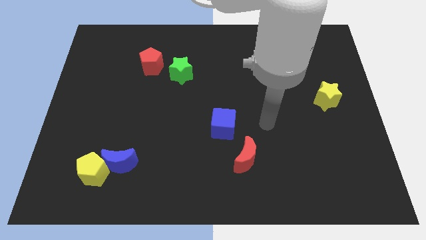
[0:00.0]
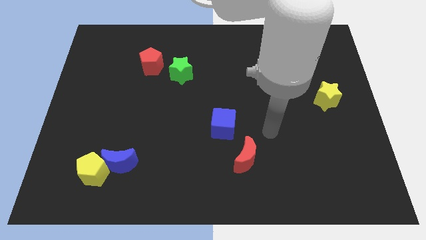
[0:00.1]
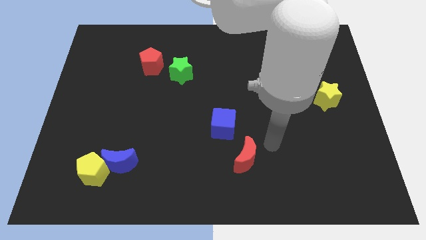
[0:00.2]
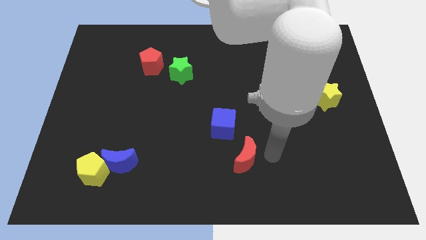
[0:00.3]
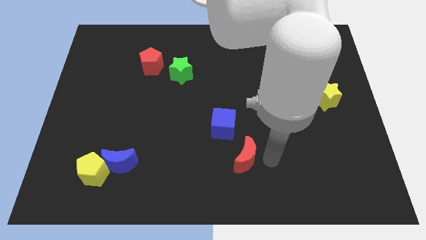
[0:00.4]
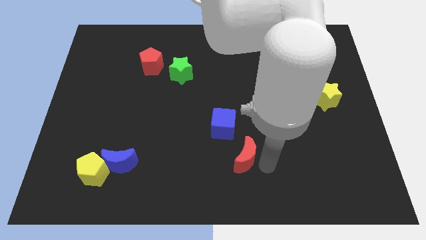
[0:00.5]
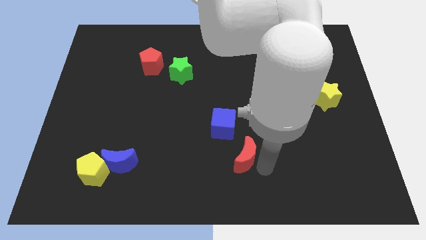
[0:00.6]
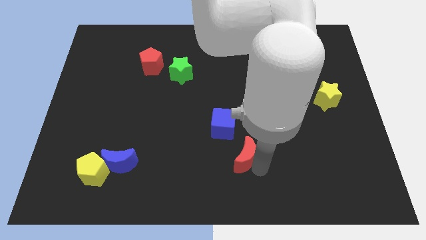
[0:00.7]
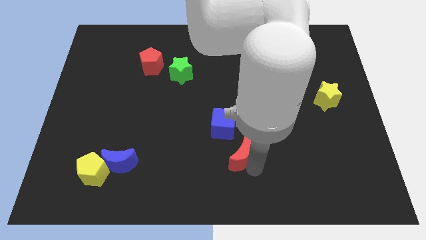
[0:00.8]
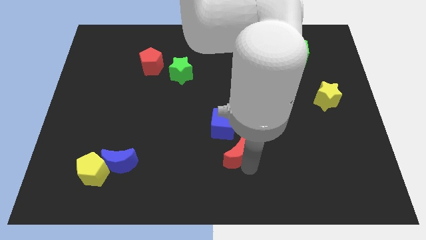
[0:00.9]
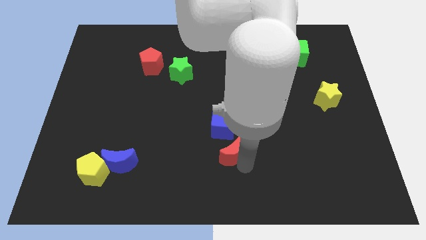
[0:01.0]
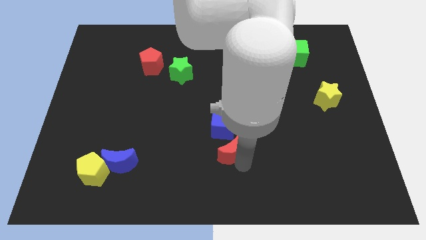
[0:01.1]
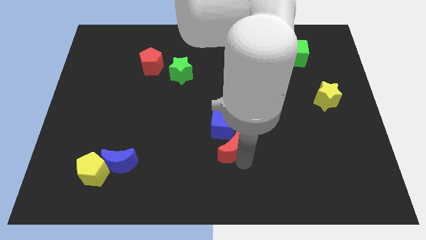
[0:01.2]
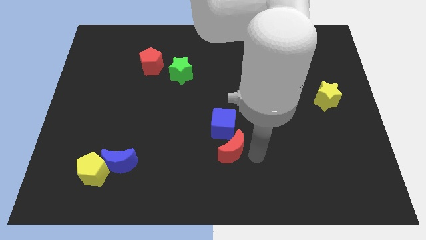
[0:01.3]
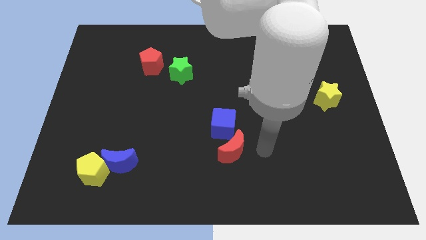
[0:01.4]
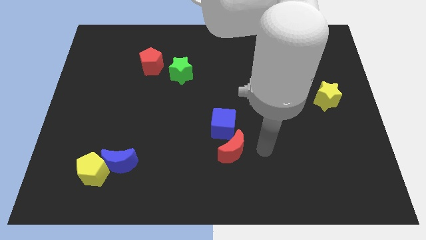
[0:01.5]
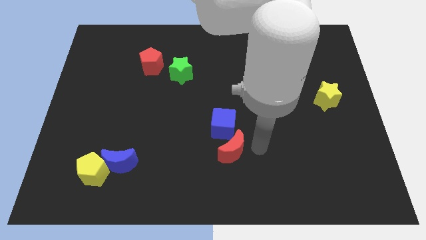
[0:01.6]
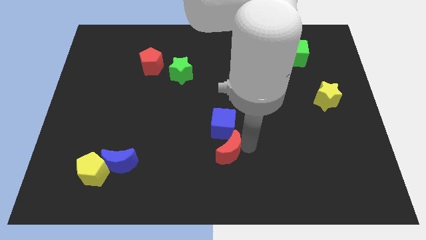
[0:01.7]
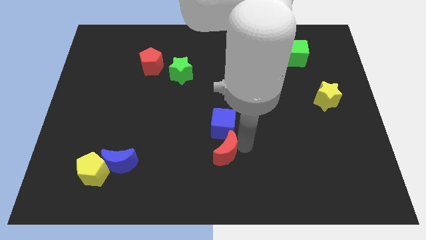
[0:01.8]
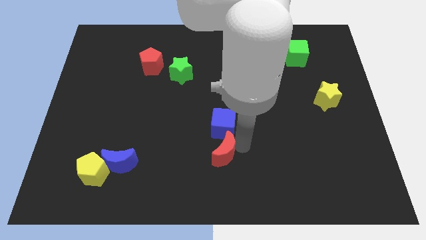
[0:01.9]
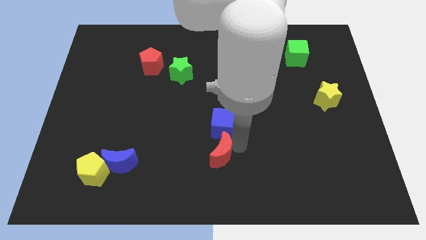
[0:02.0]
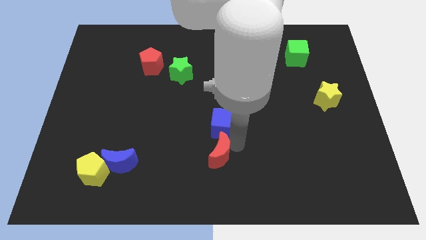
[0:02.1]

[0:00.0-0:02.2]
drag the red moon below the blue cube

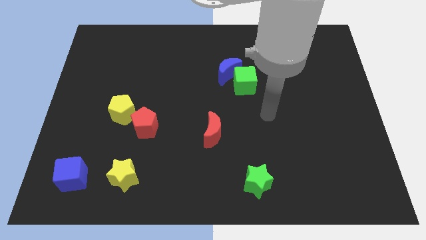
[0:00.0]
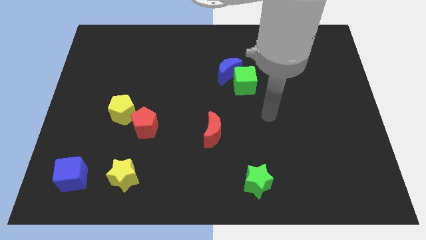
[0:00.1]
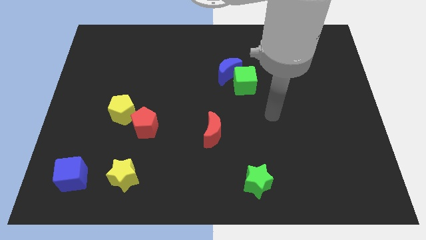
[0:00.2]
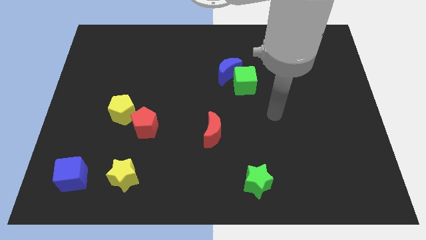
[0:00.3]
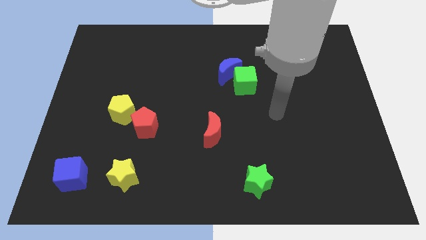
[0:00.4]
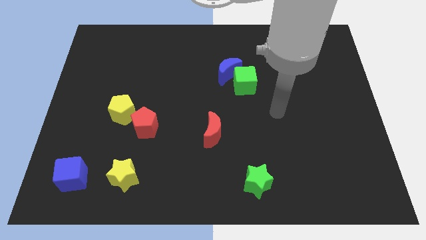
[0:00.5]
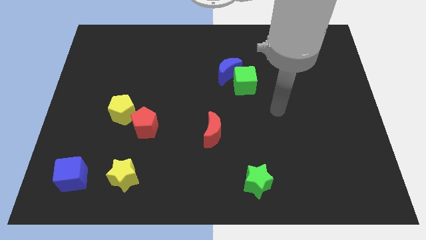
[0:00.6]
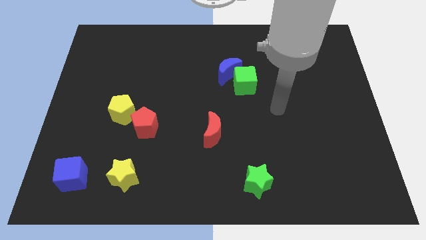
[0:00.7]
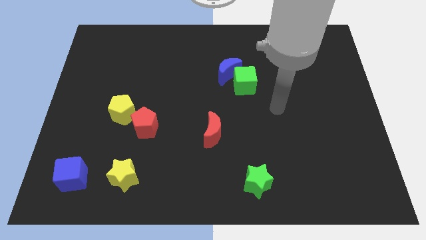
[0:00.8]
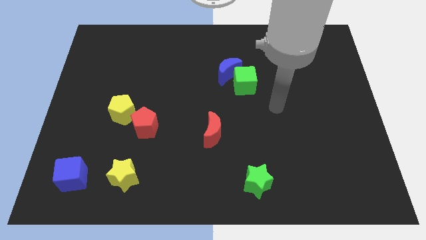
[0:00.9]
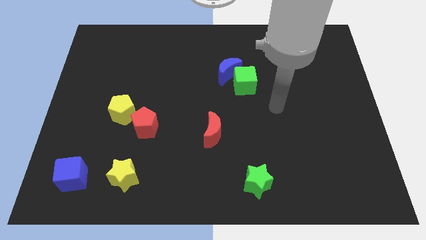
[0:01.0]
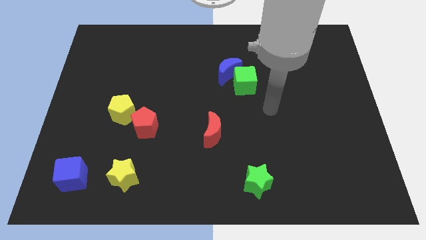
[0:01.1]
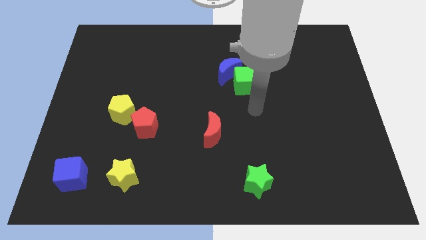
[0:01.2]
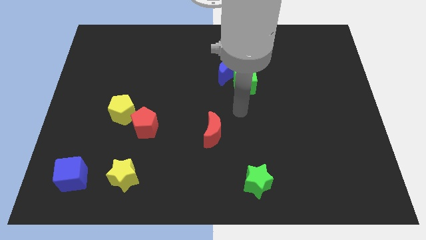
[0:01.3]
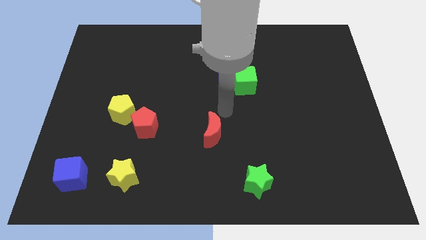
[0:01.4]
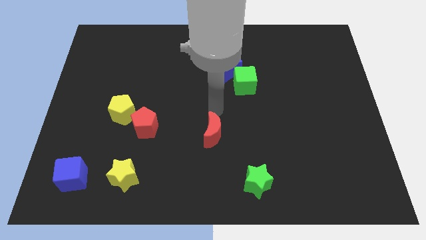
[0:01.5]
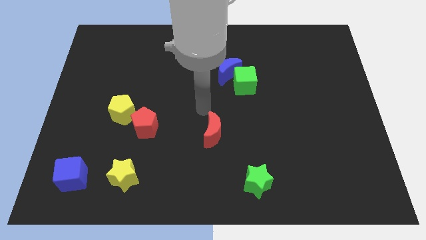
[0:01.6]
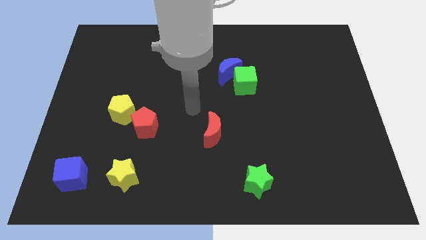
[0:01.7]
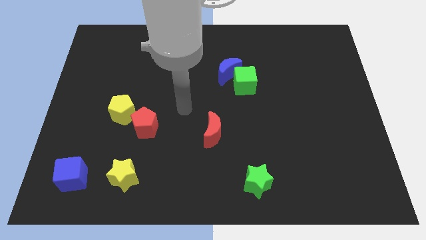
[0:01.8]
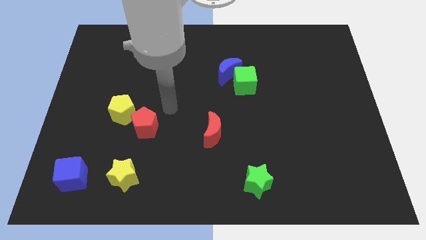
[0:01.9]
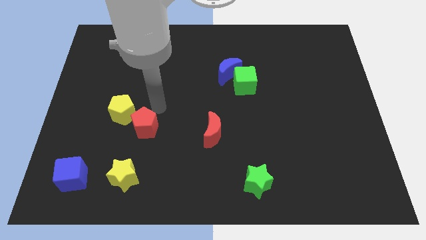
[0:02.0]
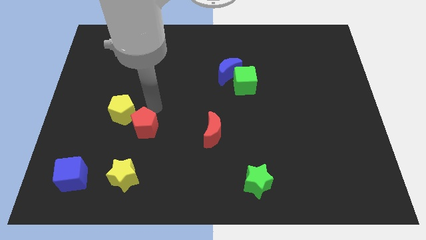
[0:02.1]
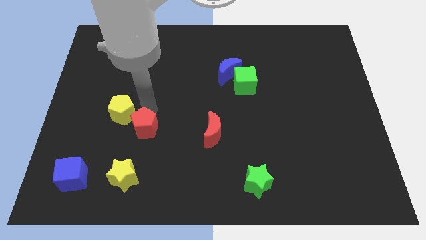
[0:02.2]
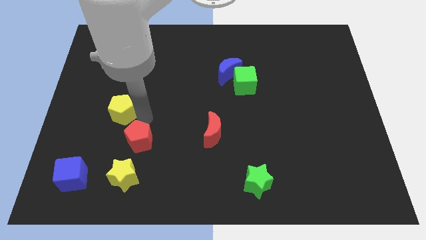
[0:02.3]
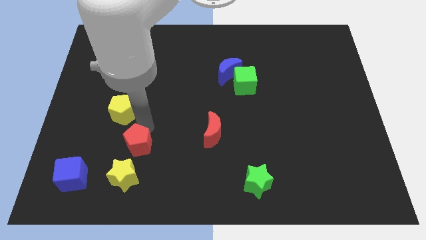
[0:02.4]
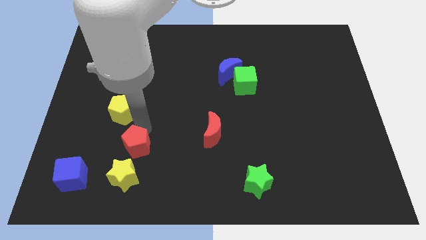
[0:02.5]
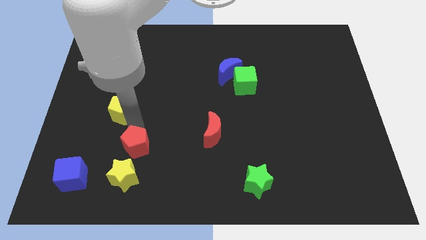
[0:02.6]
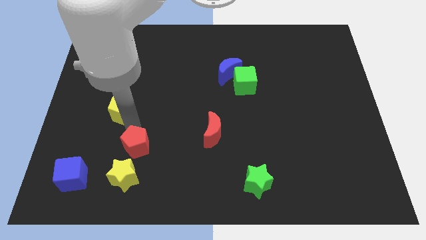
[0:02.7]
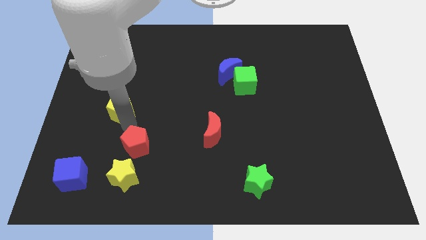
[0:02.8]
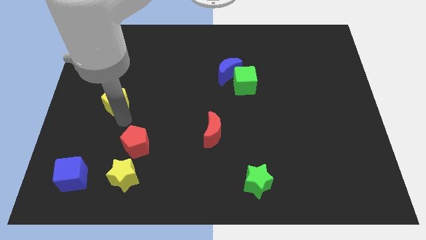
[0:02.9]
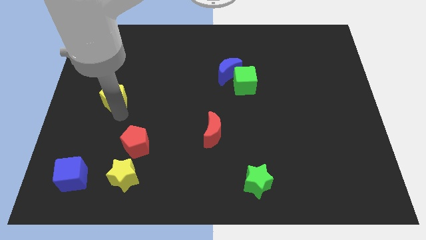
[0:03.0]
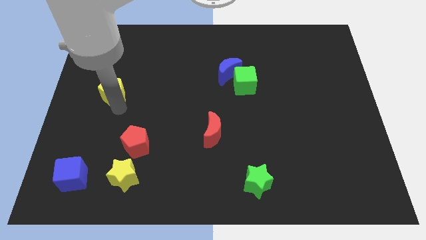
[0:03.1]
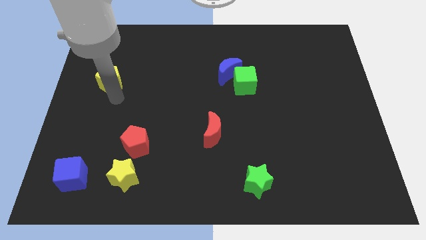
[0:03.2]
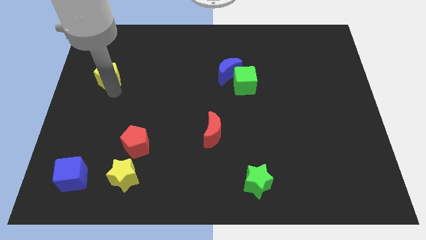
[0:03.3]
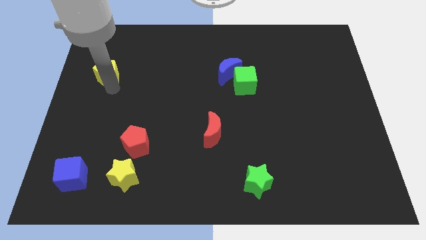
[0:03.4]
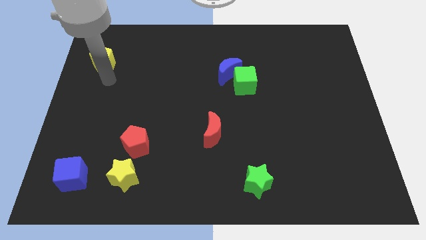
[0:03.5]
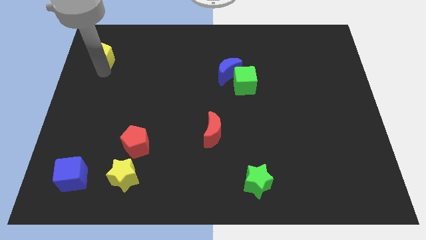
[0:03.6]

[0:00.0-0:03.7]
separate the yellow pentagon from the red pentagon

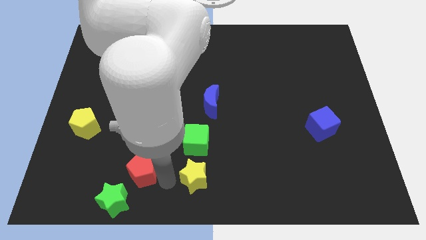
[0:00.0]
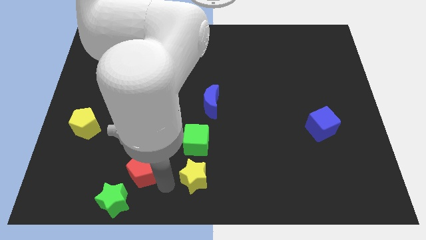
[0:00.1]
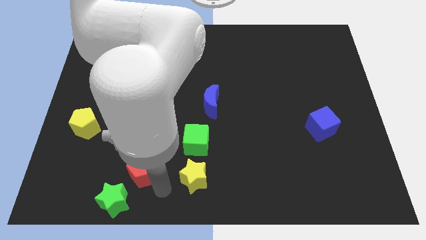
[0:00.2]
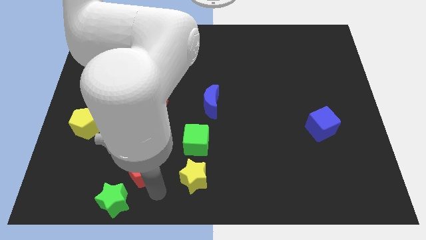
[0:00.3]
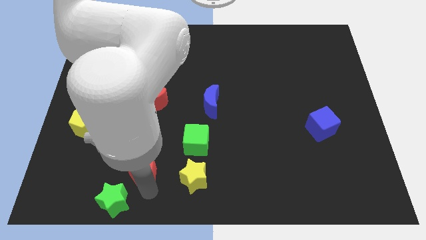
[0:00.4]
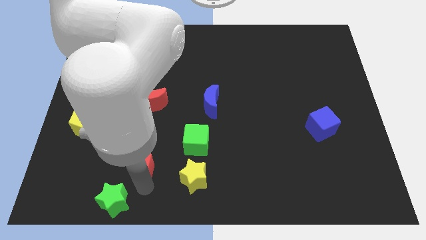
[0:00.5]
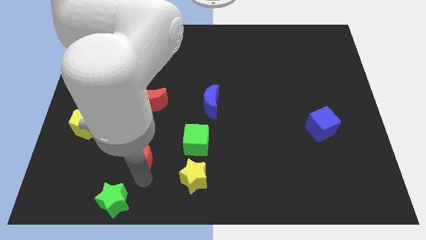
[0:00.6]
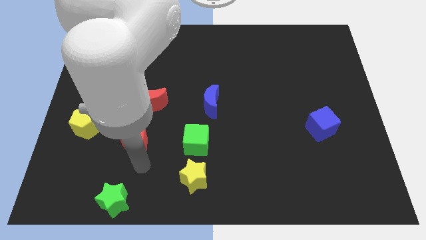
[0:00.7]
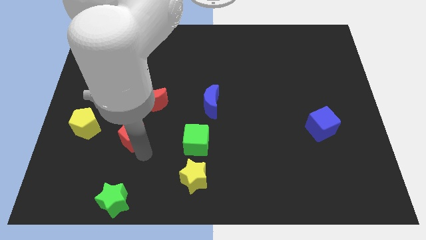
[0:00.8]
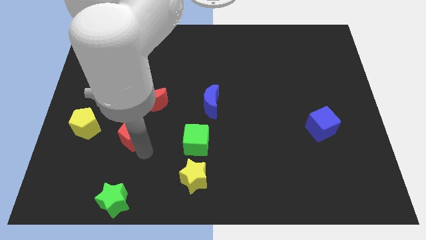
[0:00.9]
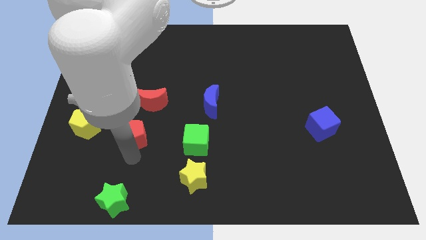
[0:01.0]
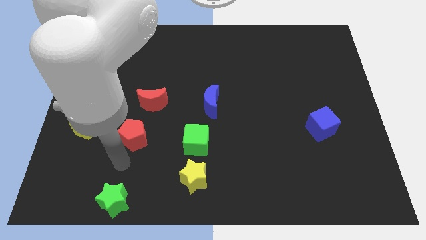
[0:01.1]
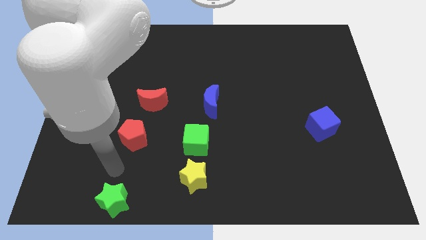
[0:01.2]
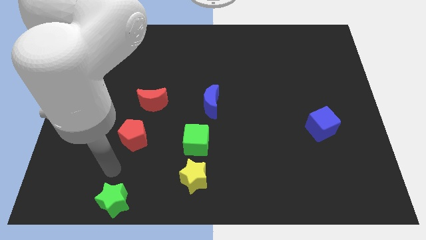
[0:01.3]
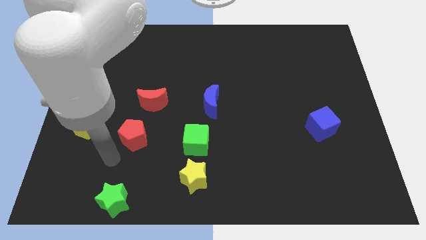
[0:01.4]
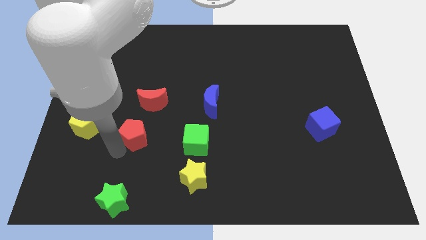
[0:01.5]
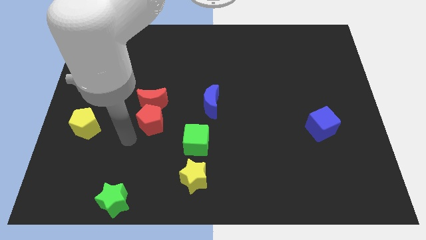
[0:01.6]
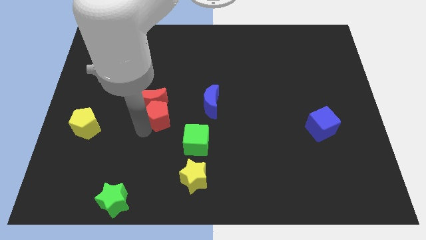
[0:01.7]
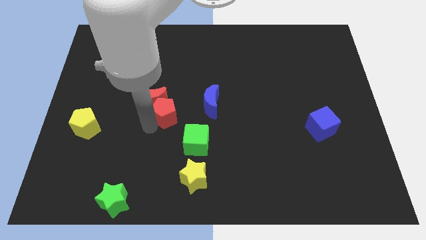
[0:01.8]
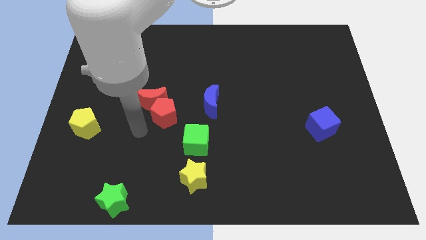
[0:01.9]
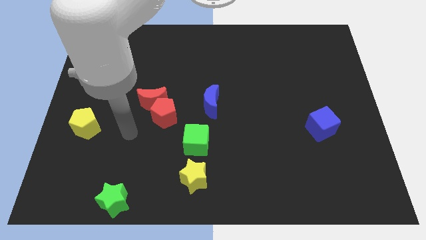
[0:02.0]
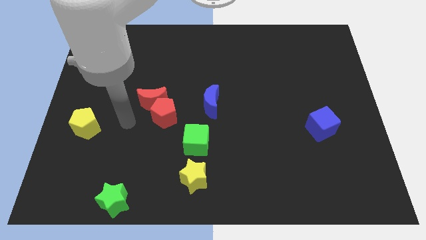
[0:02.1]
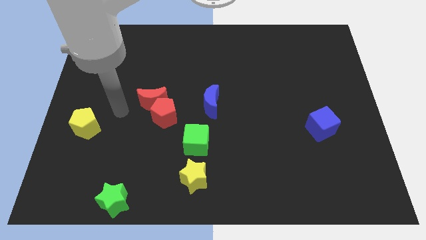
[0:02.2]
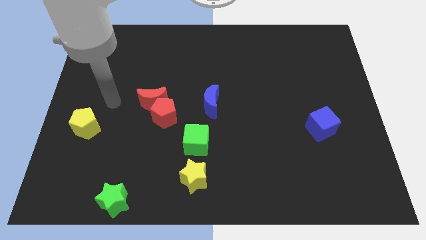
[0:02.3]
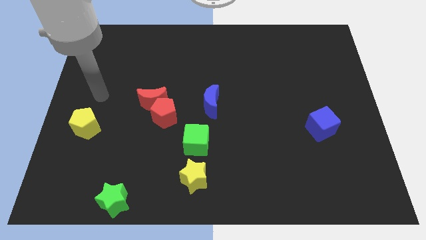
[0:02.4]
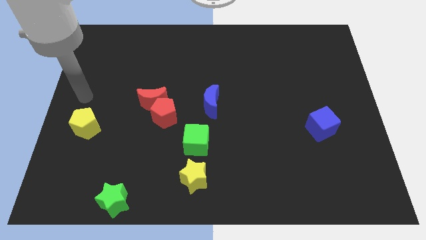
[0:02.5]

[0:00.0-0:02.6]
push the red pentagon into the red moon

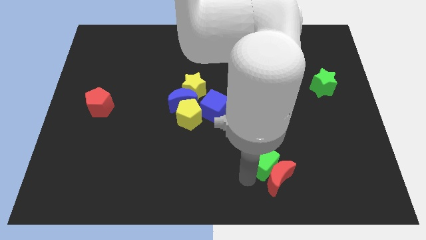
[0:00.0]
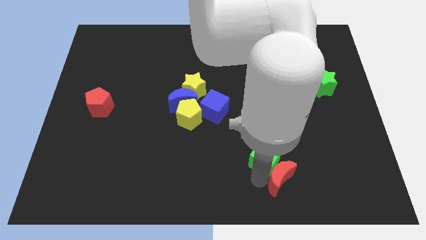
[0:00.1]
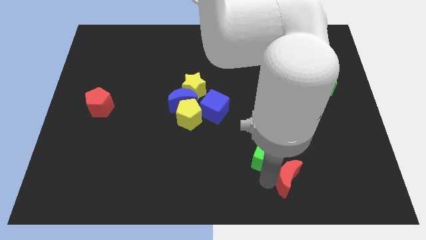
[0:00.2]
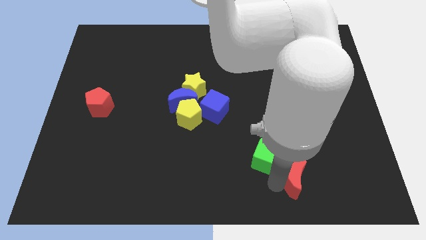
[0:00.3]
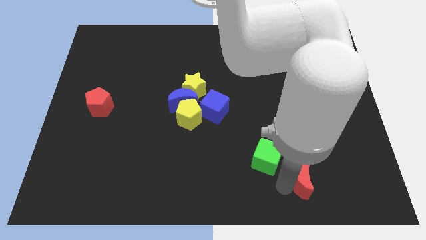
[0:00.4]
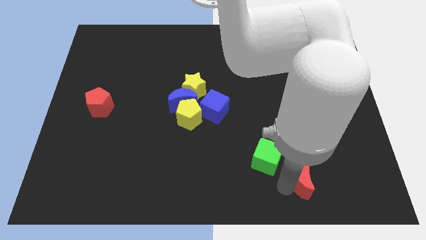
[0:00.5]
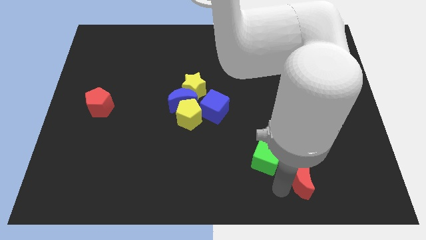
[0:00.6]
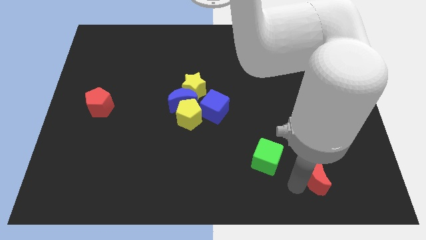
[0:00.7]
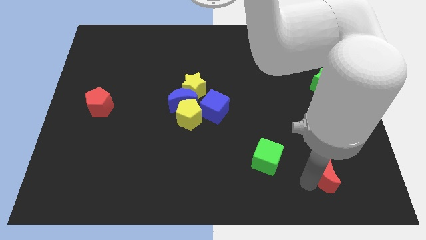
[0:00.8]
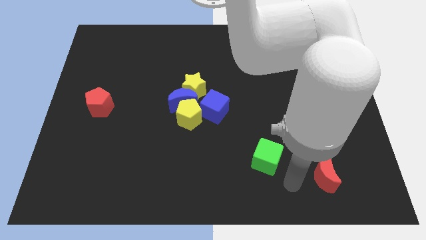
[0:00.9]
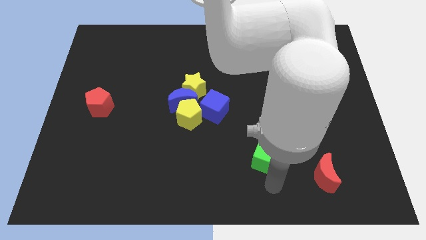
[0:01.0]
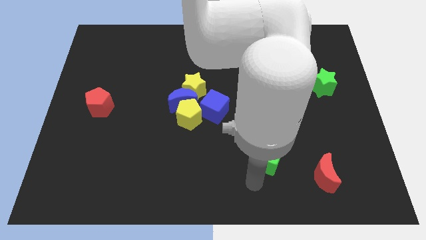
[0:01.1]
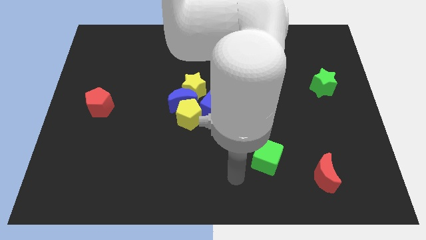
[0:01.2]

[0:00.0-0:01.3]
separate red moon from the green cube
